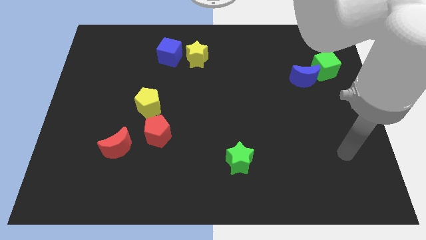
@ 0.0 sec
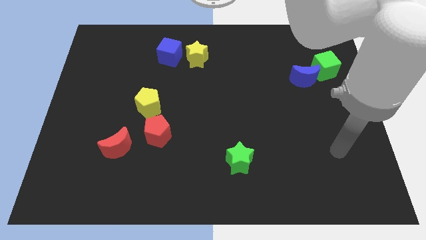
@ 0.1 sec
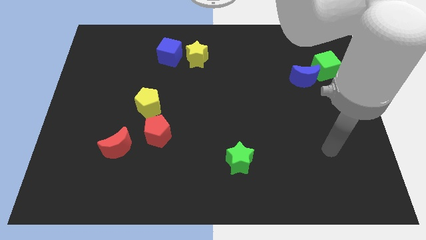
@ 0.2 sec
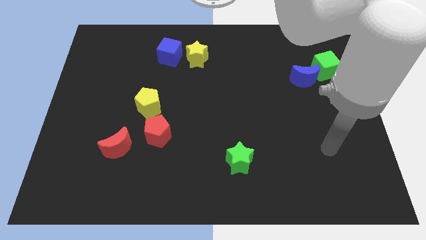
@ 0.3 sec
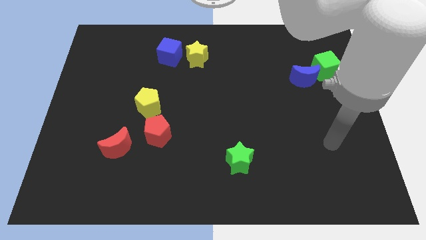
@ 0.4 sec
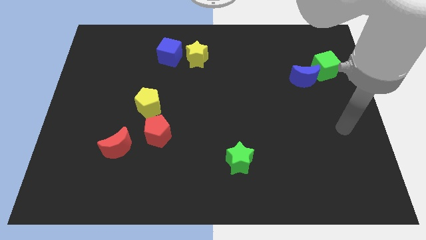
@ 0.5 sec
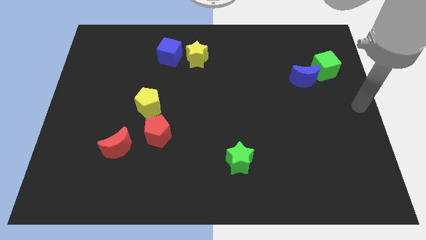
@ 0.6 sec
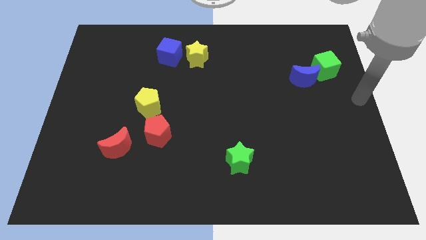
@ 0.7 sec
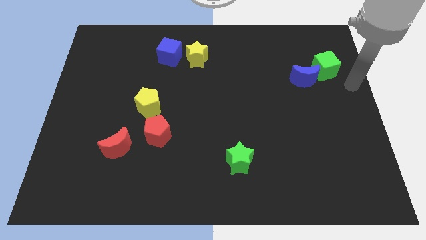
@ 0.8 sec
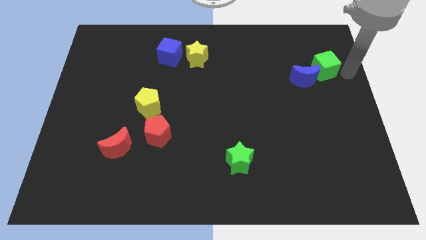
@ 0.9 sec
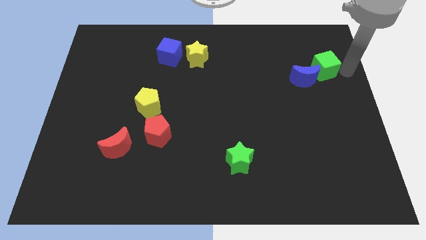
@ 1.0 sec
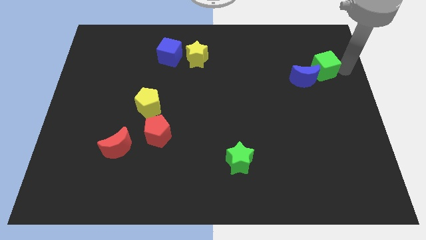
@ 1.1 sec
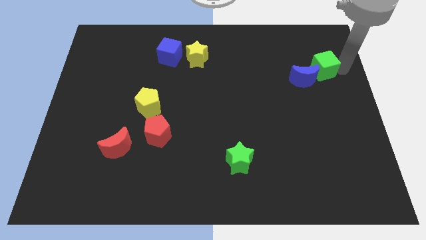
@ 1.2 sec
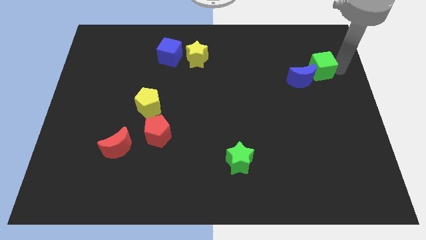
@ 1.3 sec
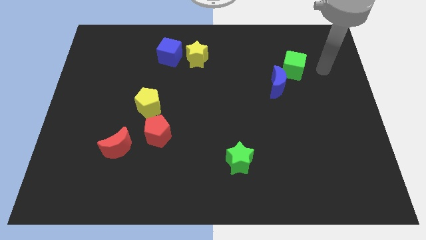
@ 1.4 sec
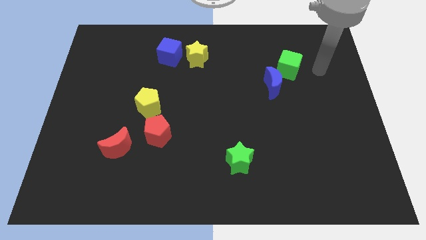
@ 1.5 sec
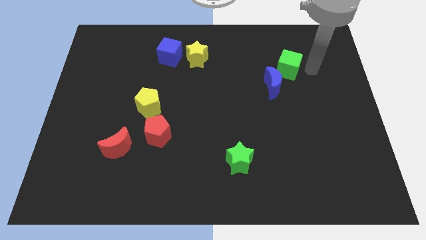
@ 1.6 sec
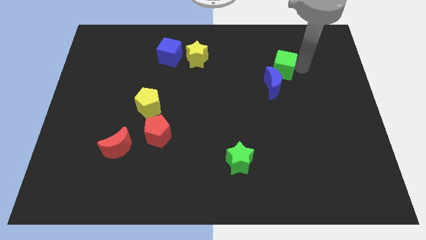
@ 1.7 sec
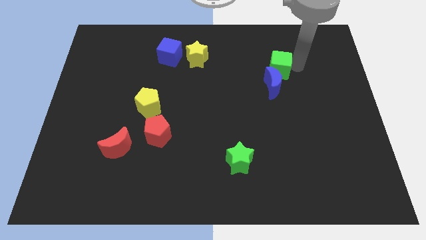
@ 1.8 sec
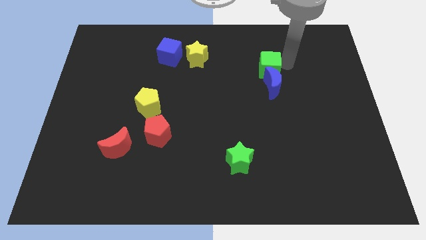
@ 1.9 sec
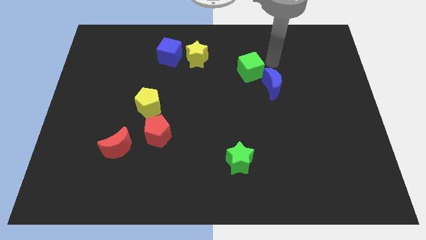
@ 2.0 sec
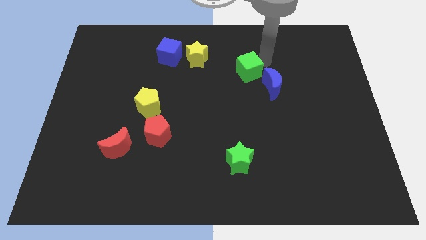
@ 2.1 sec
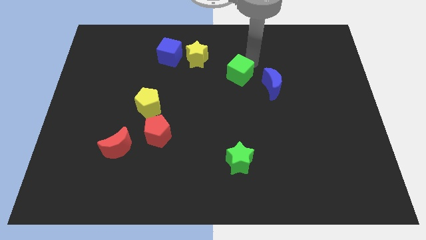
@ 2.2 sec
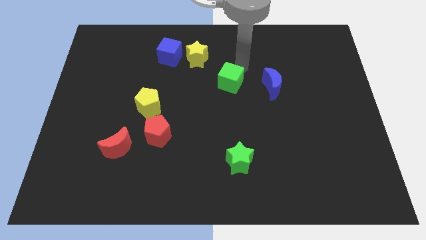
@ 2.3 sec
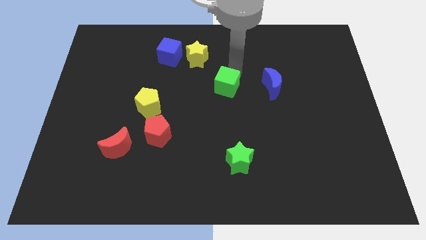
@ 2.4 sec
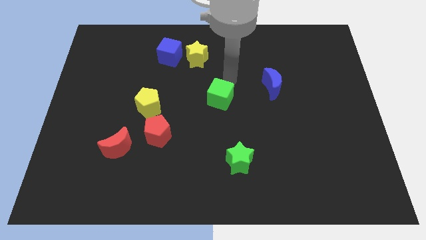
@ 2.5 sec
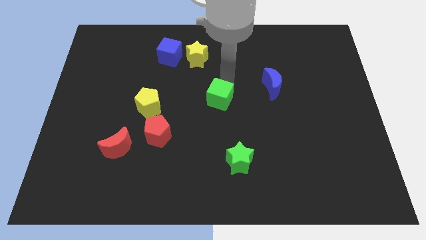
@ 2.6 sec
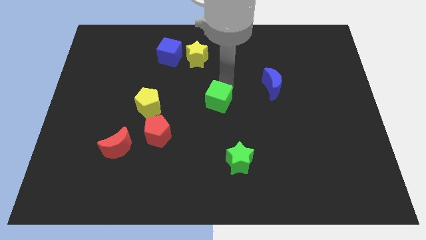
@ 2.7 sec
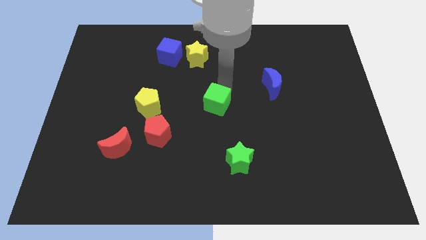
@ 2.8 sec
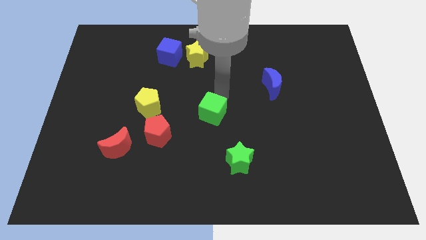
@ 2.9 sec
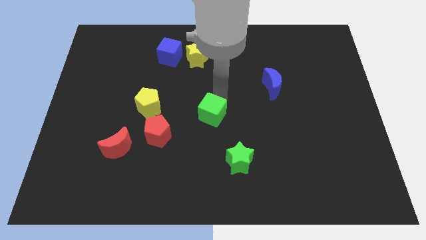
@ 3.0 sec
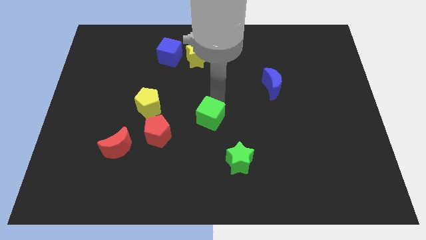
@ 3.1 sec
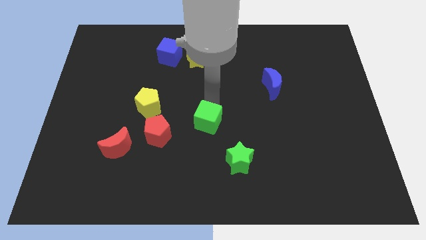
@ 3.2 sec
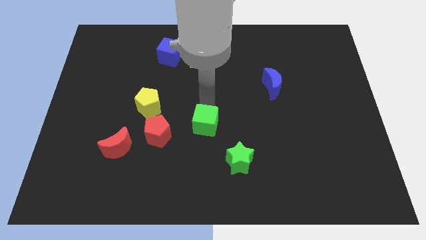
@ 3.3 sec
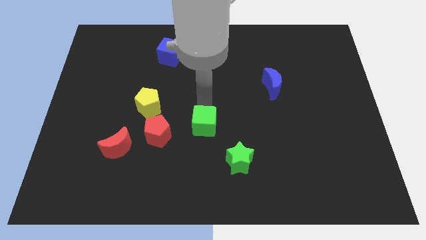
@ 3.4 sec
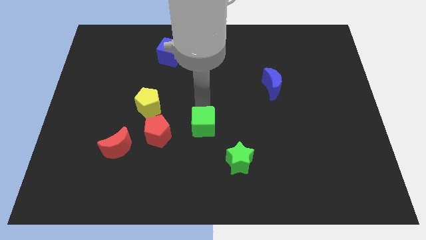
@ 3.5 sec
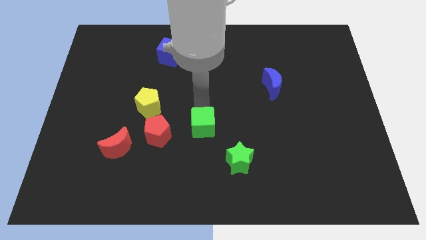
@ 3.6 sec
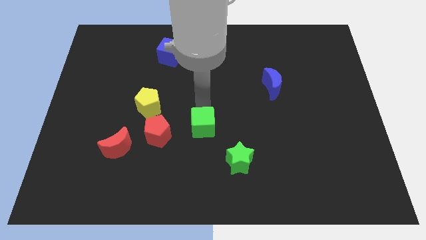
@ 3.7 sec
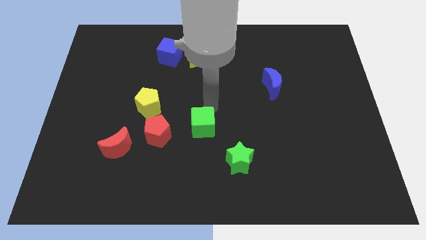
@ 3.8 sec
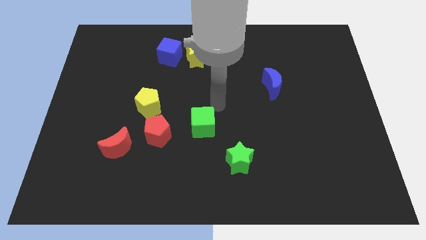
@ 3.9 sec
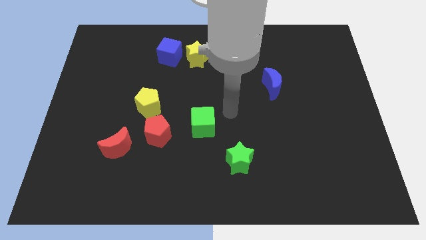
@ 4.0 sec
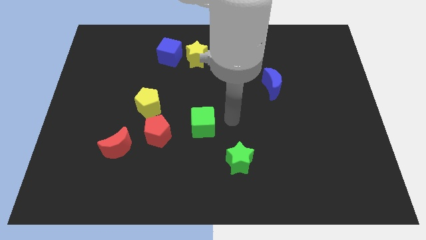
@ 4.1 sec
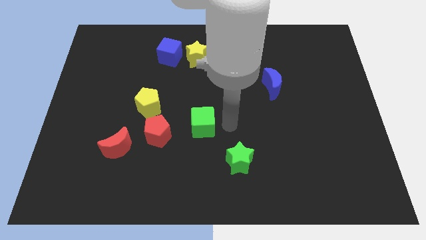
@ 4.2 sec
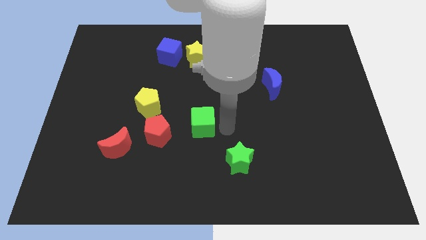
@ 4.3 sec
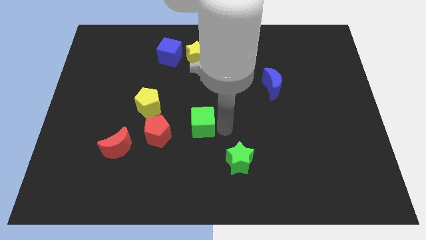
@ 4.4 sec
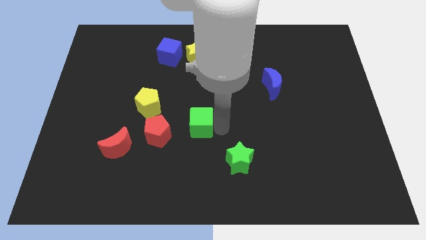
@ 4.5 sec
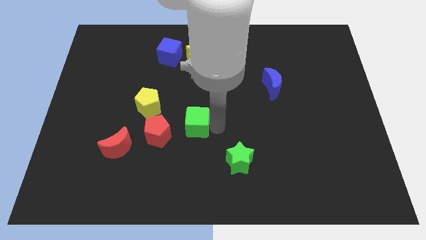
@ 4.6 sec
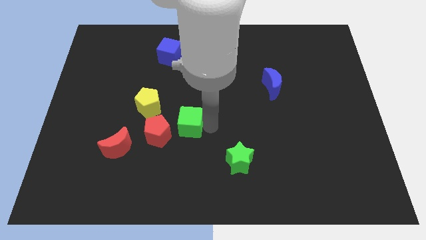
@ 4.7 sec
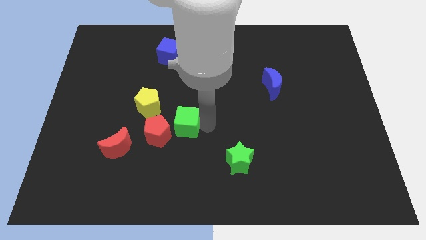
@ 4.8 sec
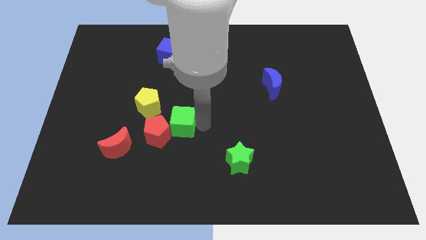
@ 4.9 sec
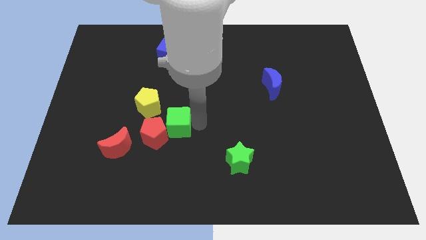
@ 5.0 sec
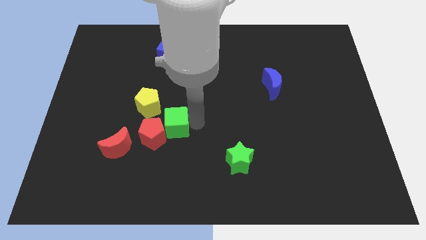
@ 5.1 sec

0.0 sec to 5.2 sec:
push the green cube to the red pentagon

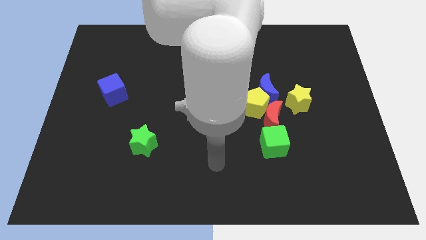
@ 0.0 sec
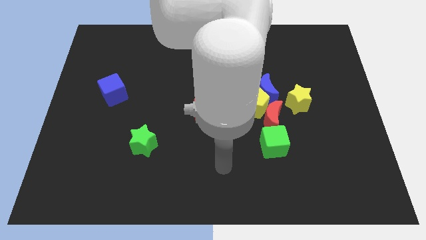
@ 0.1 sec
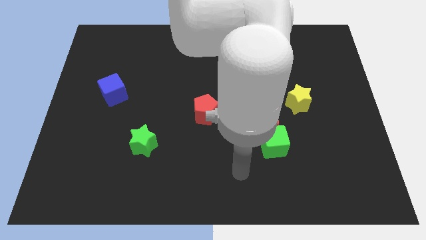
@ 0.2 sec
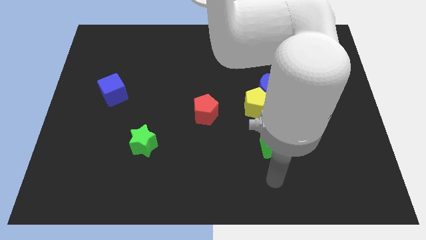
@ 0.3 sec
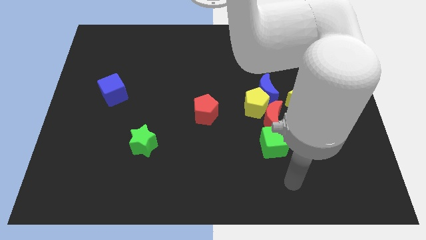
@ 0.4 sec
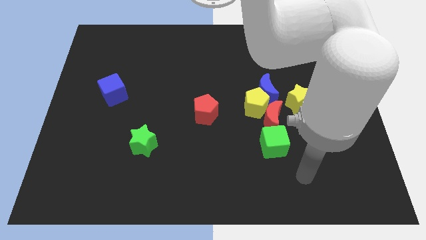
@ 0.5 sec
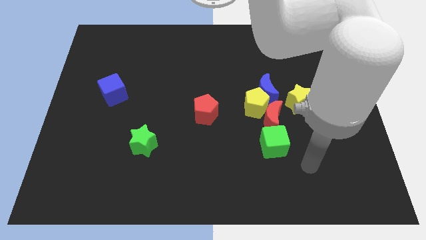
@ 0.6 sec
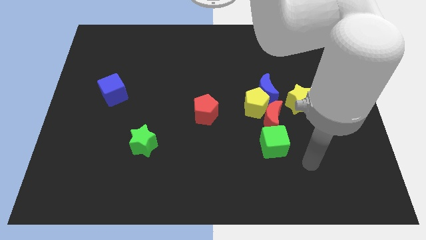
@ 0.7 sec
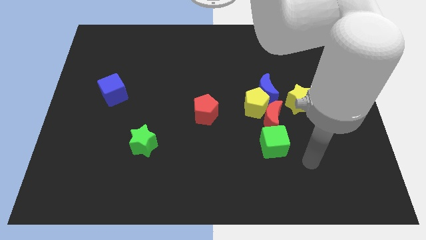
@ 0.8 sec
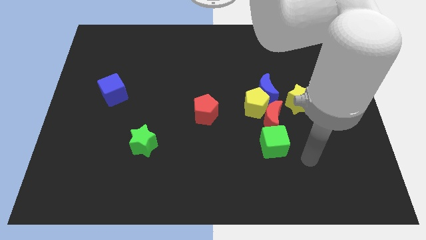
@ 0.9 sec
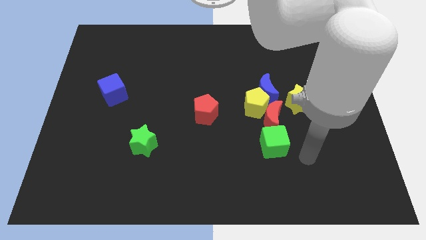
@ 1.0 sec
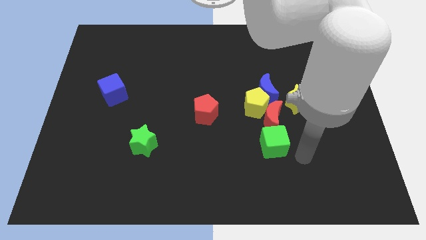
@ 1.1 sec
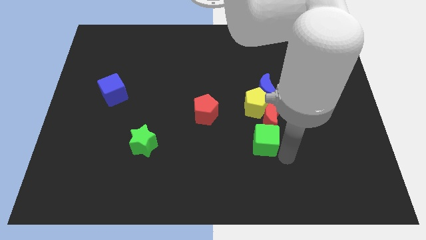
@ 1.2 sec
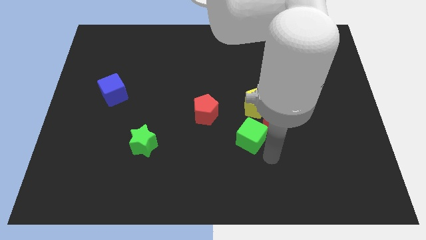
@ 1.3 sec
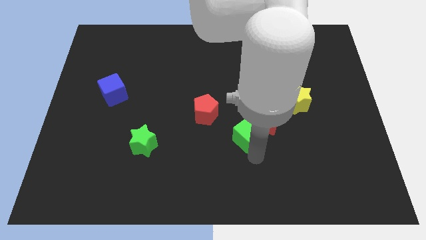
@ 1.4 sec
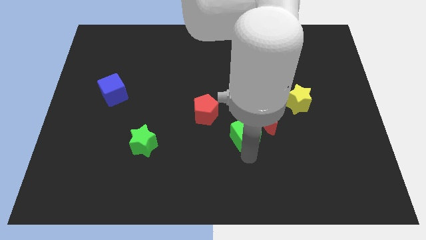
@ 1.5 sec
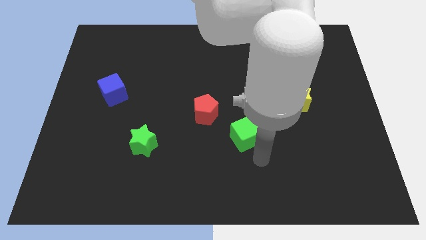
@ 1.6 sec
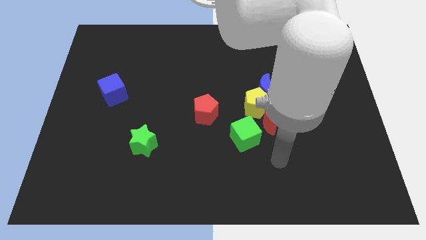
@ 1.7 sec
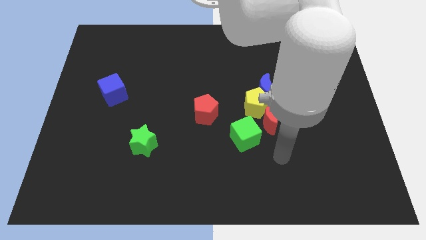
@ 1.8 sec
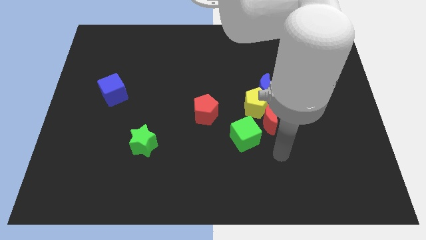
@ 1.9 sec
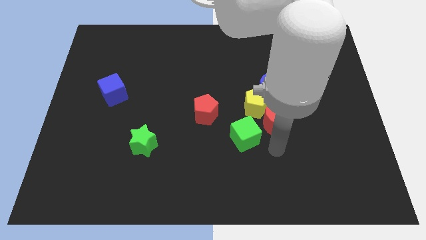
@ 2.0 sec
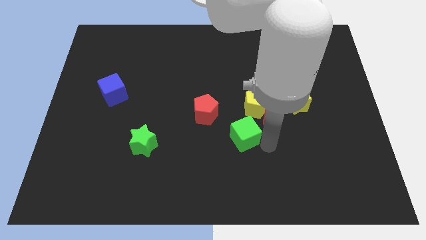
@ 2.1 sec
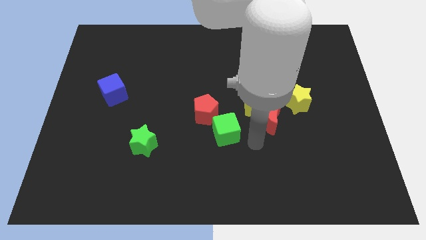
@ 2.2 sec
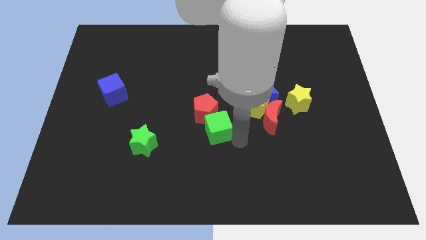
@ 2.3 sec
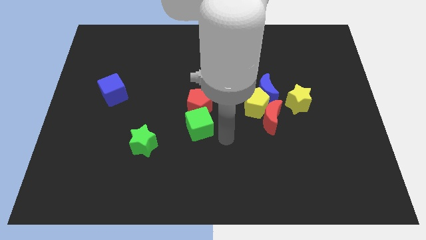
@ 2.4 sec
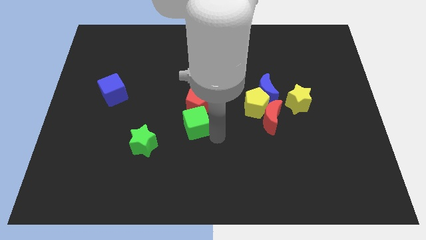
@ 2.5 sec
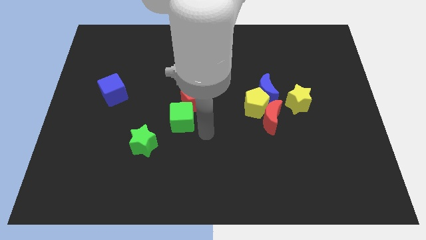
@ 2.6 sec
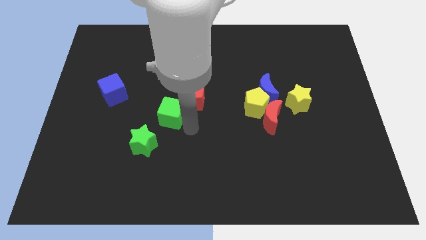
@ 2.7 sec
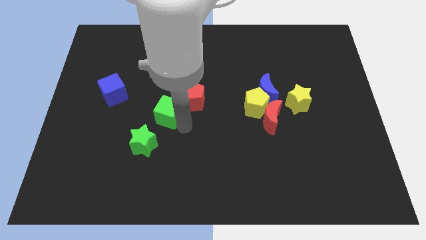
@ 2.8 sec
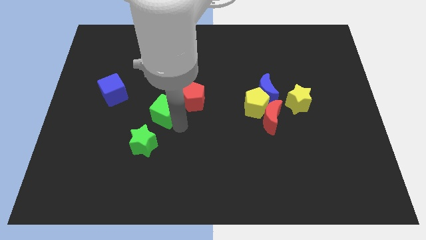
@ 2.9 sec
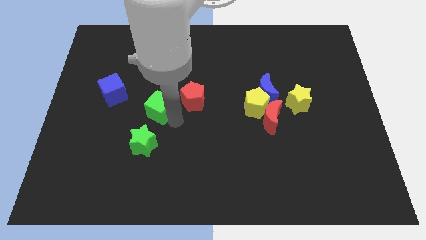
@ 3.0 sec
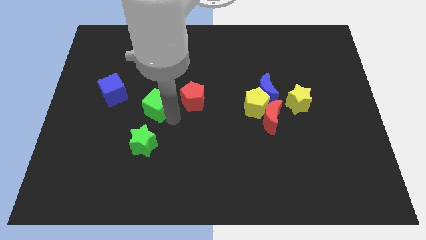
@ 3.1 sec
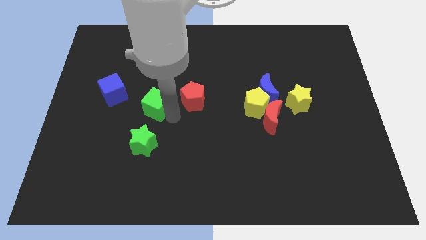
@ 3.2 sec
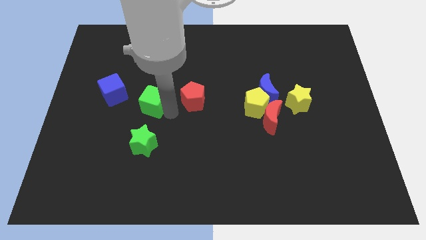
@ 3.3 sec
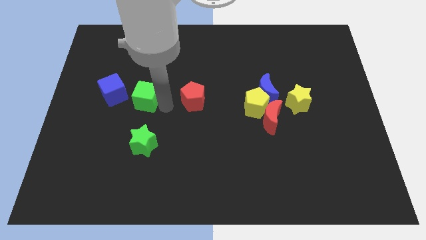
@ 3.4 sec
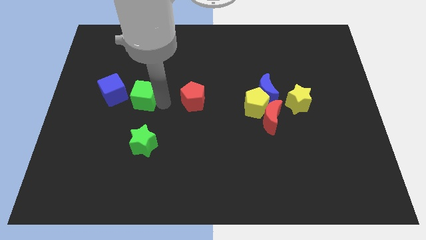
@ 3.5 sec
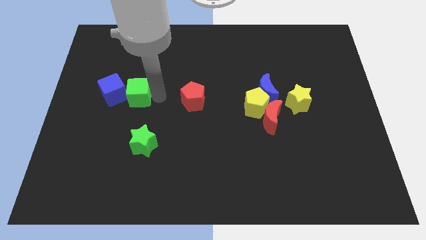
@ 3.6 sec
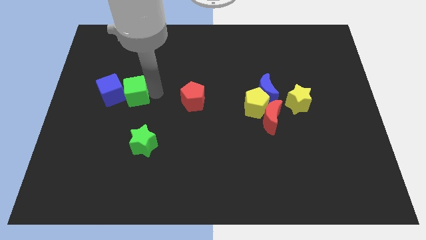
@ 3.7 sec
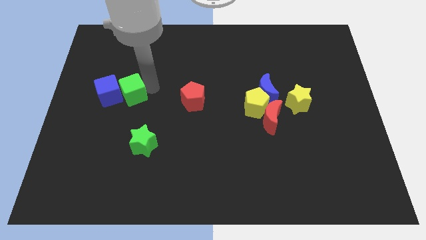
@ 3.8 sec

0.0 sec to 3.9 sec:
slide the green cube next to the blue cube
